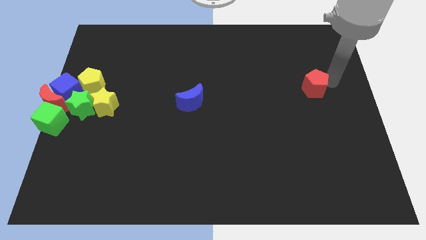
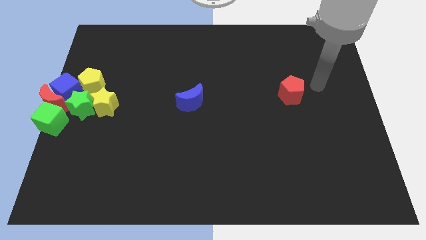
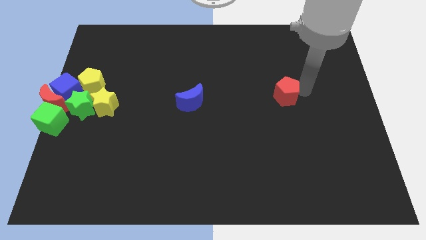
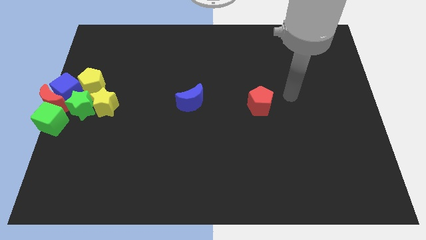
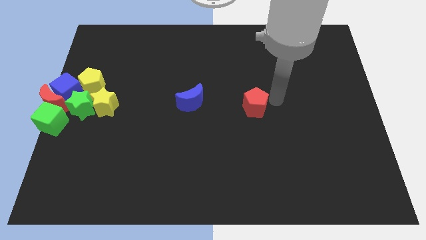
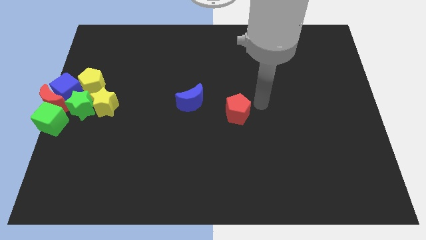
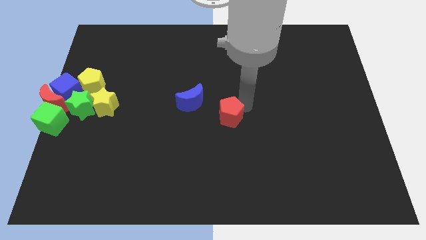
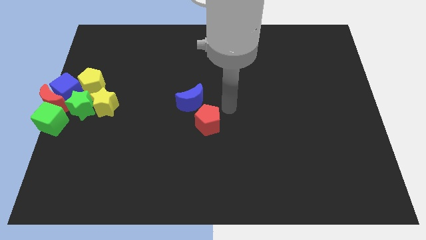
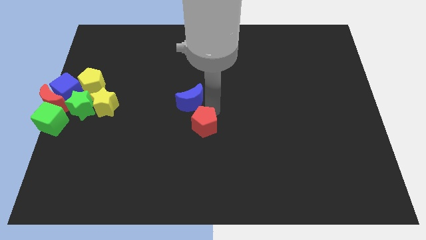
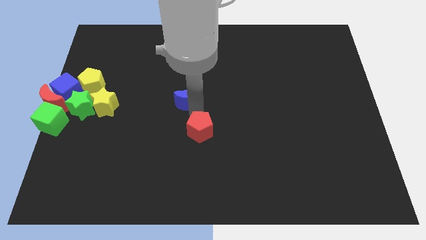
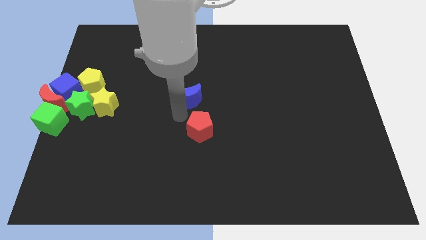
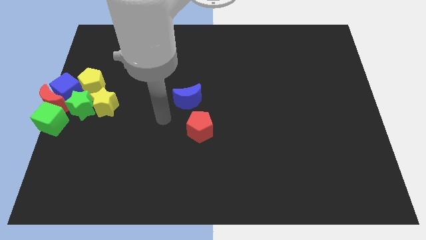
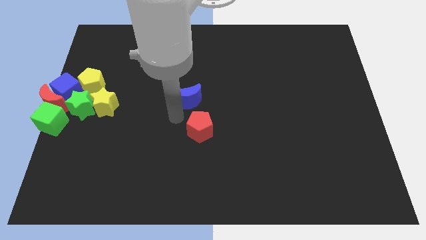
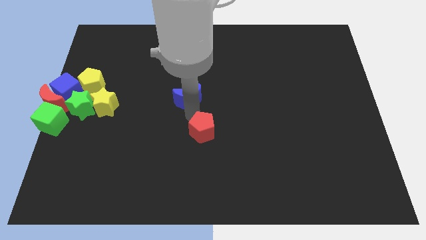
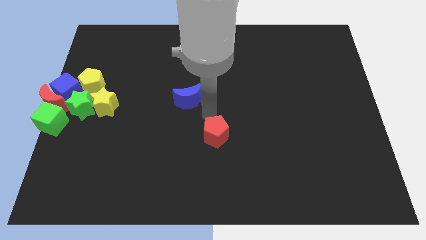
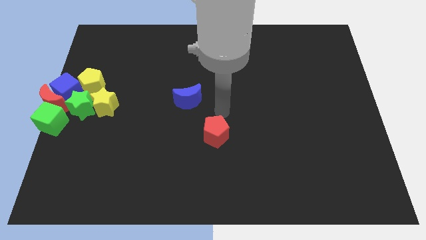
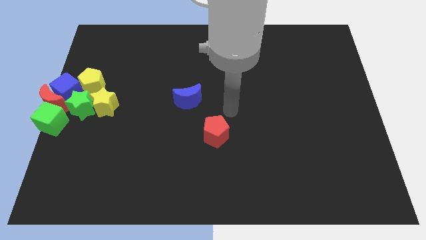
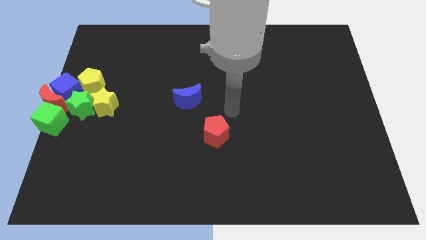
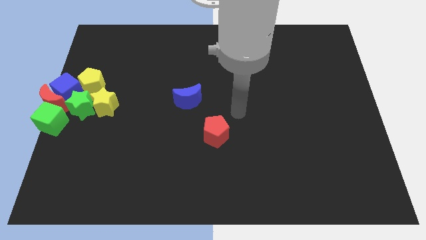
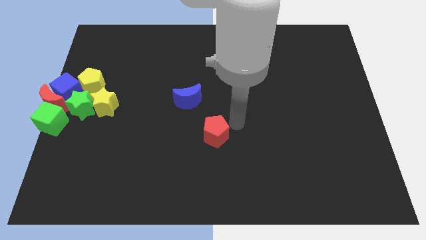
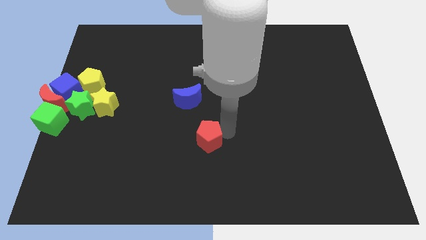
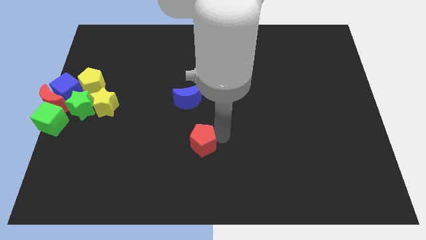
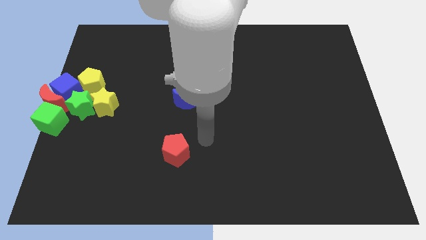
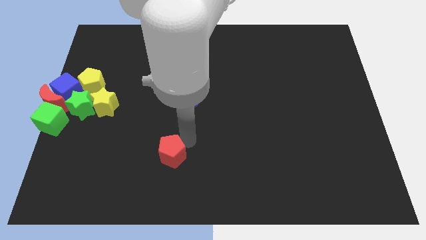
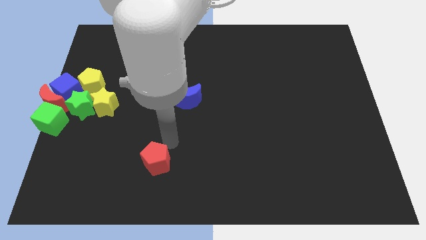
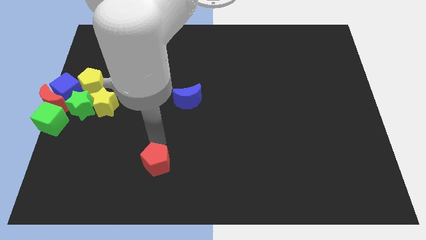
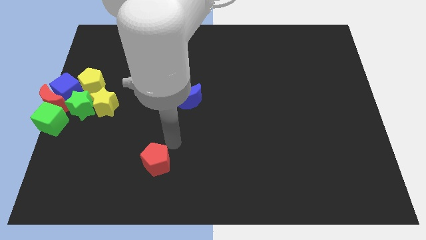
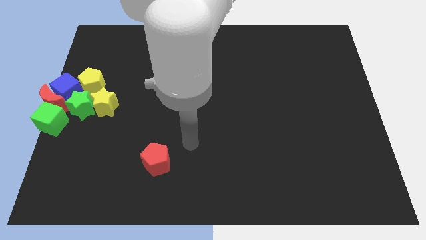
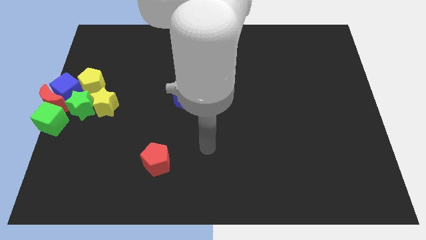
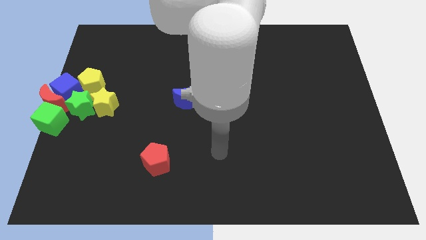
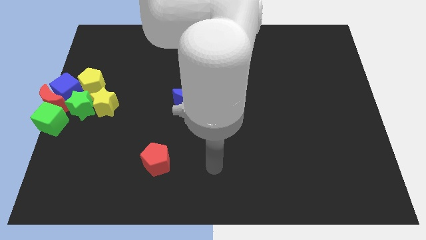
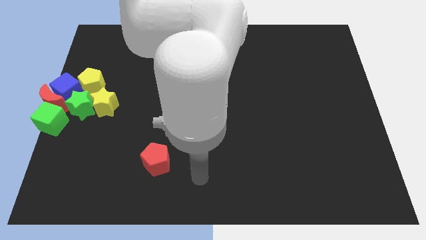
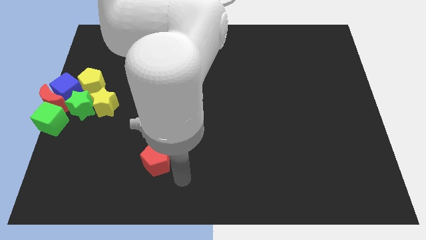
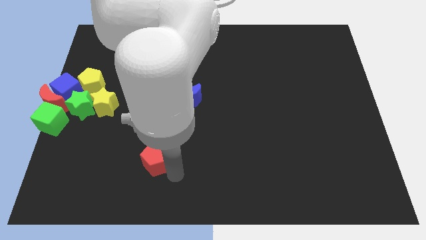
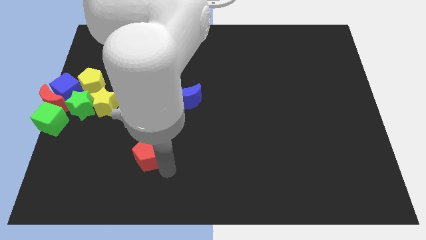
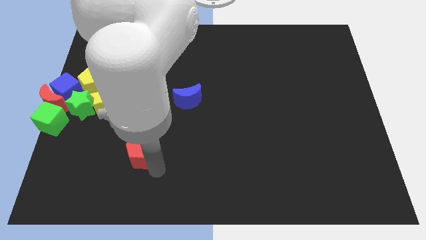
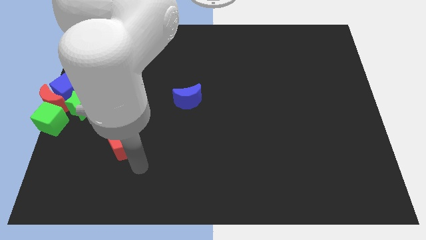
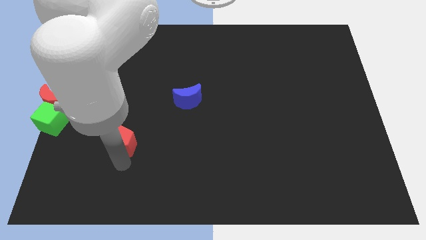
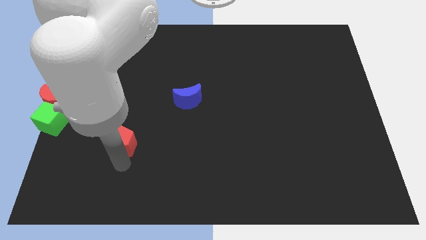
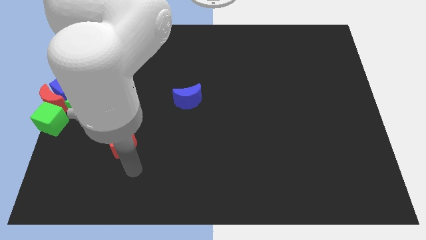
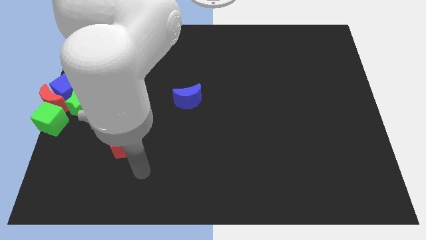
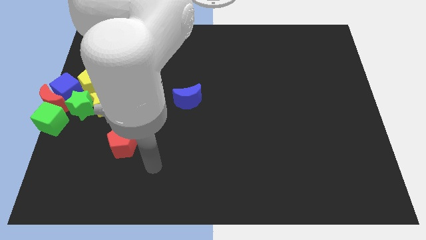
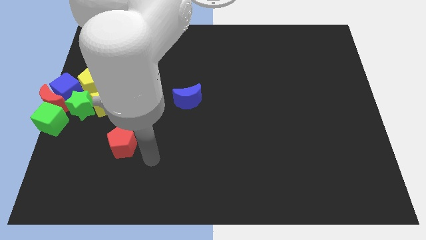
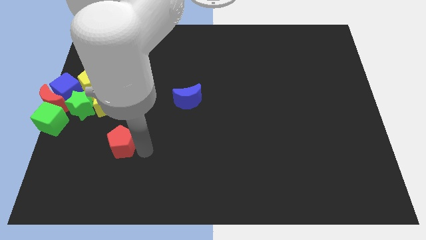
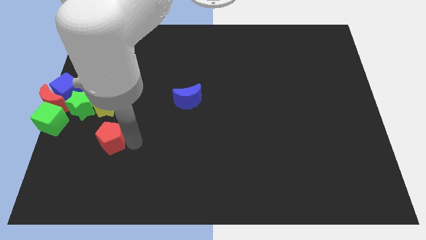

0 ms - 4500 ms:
place the red pentagon below the yellow star

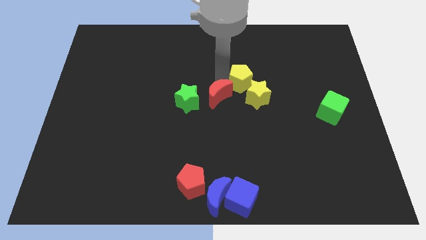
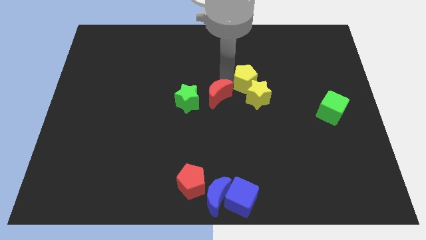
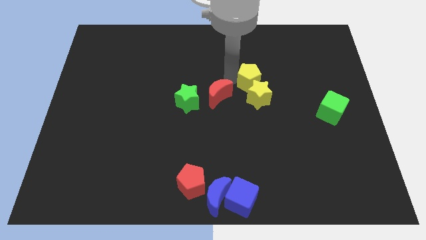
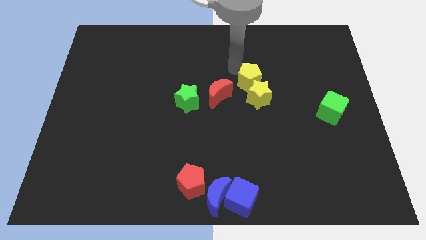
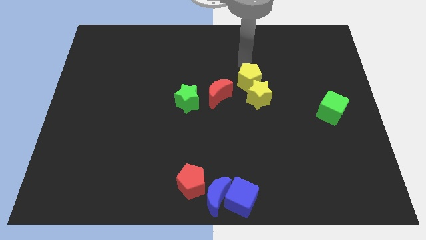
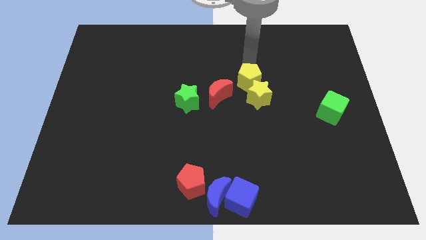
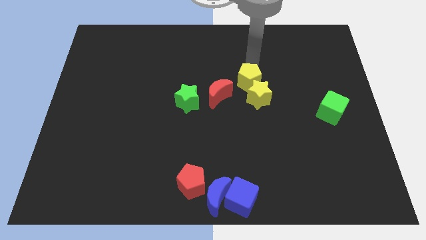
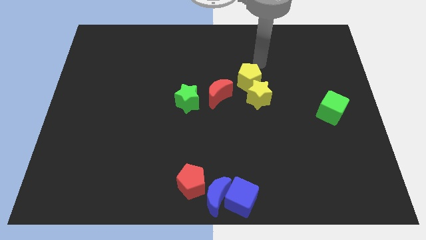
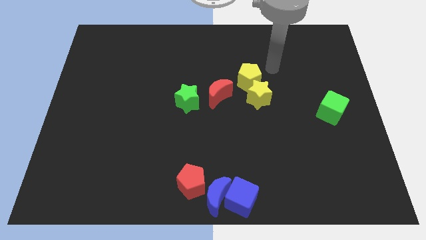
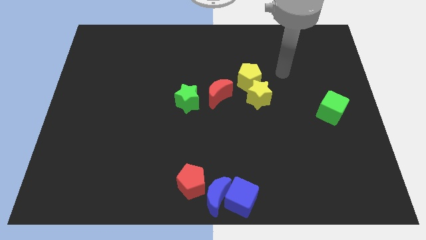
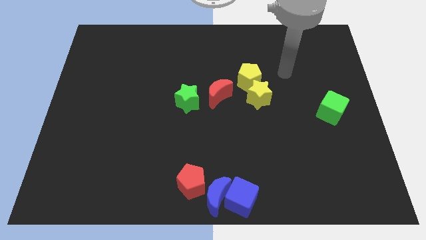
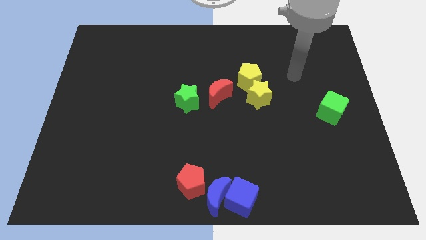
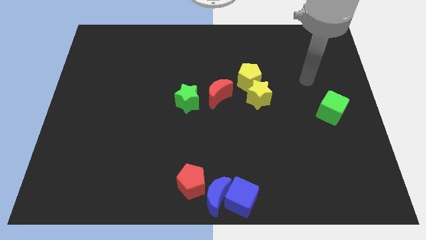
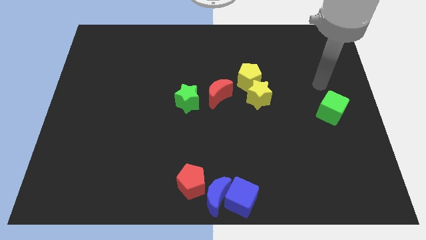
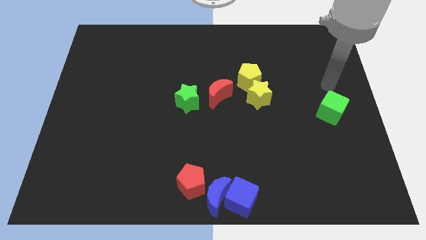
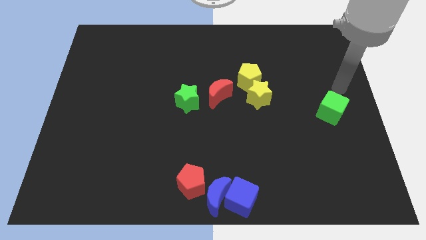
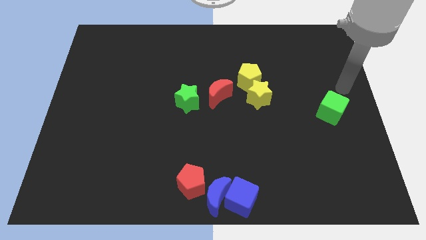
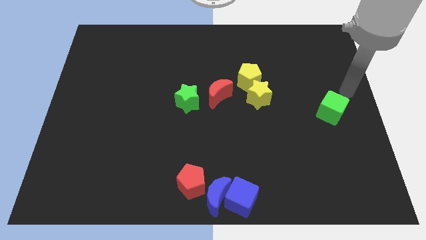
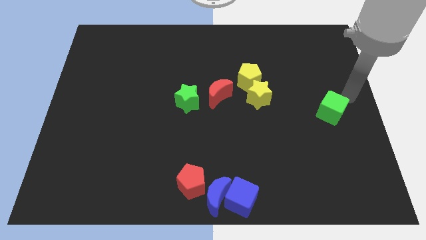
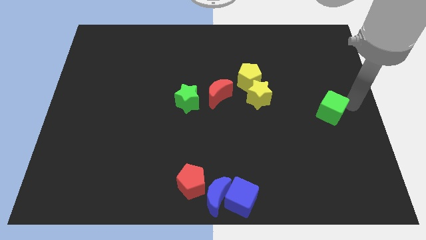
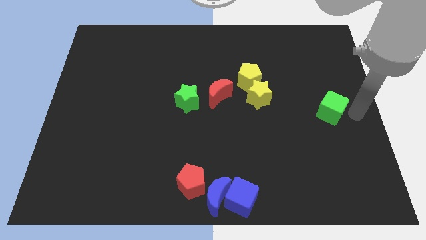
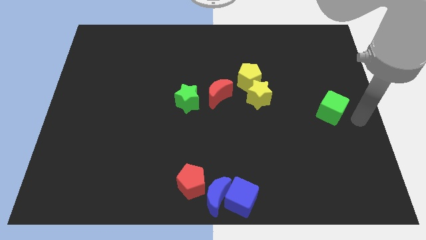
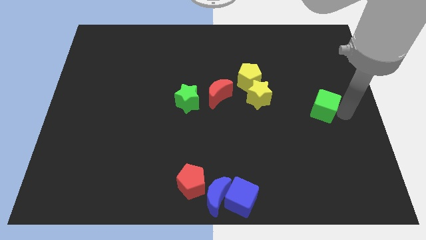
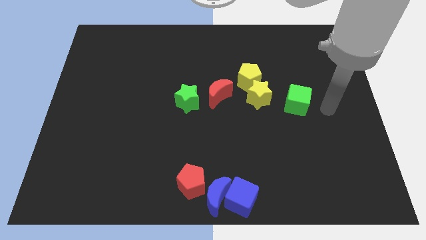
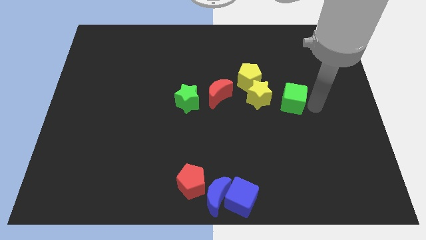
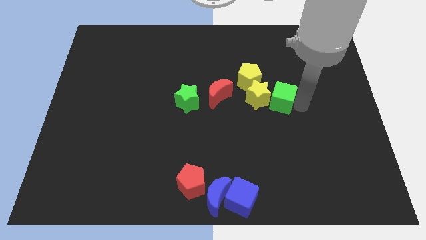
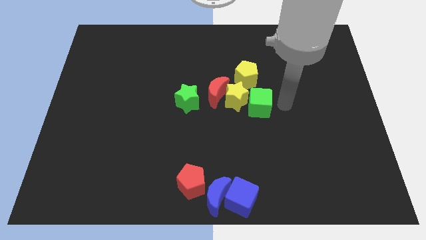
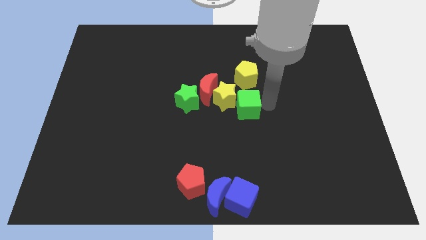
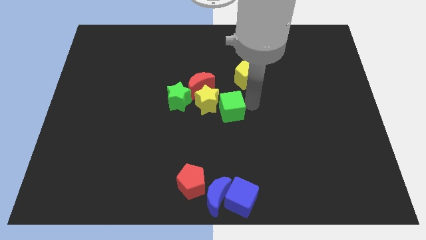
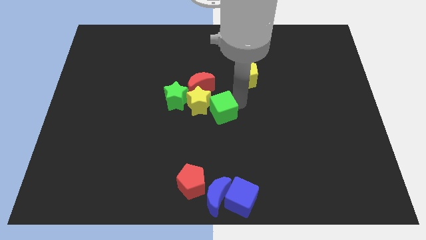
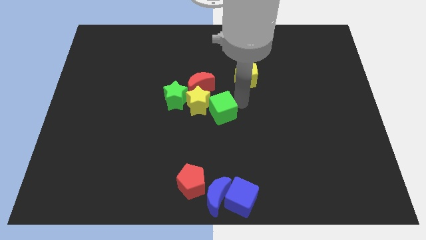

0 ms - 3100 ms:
slide green cube to the center

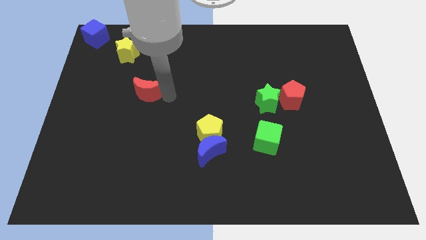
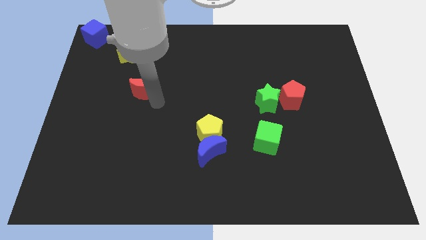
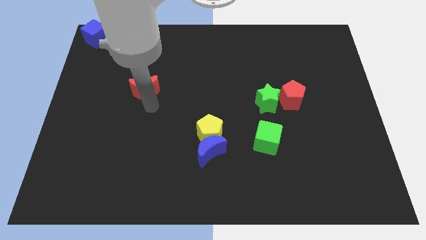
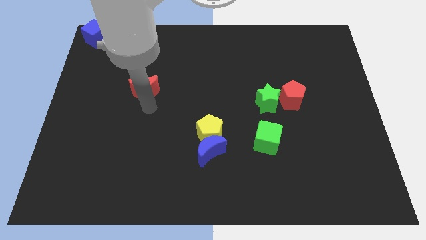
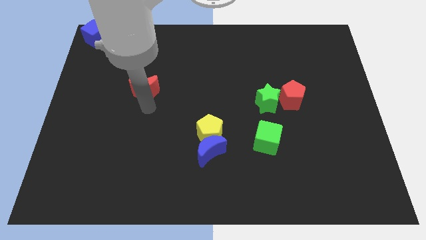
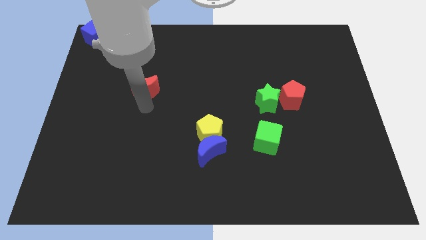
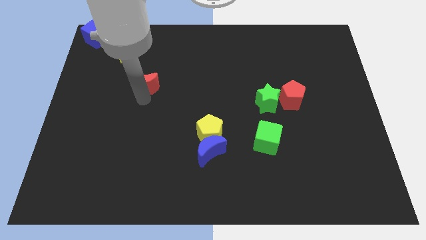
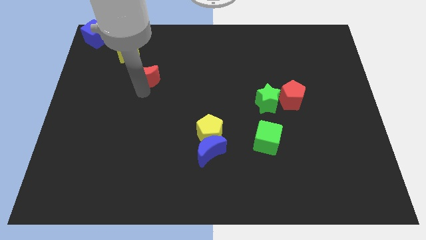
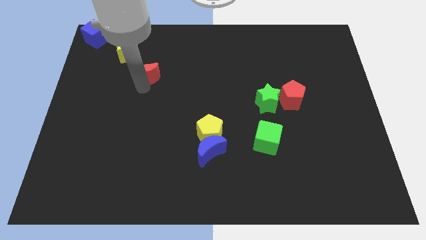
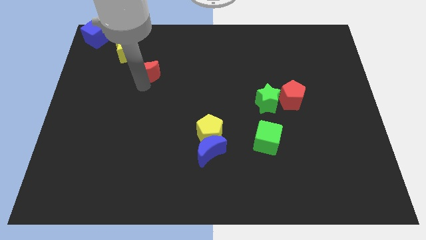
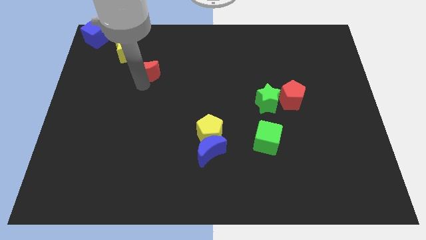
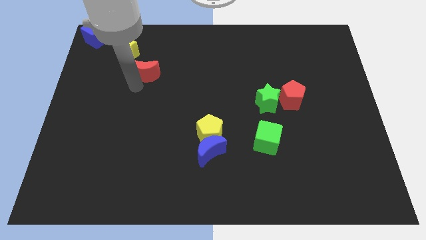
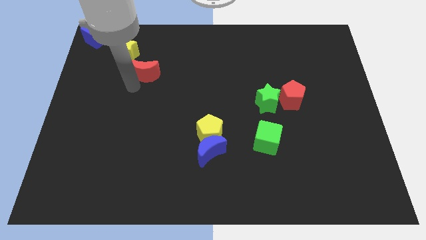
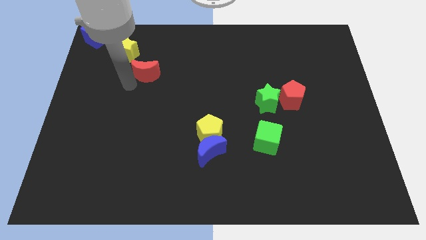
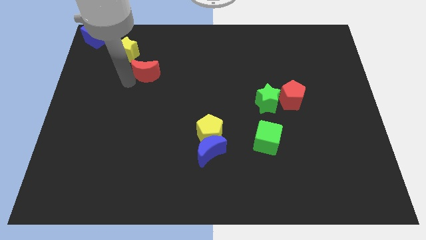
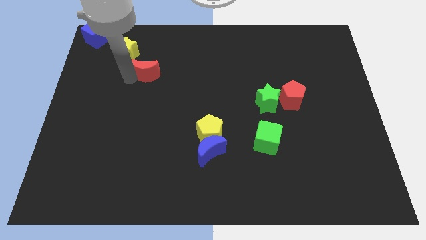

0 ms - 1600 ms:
push red crescent to the right bottom of the yellow star
